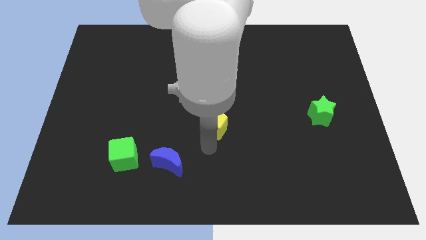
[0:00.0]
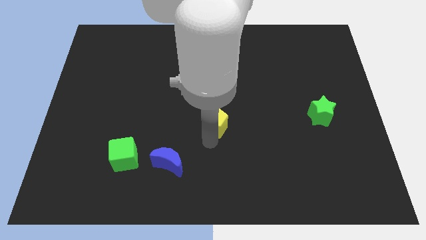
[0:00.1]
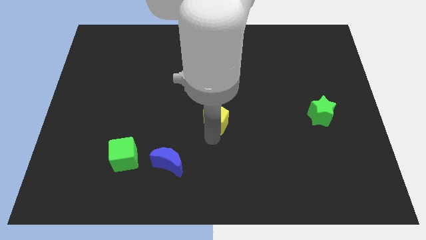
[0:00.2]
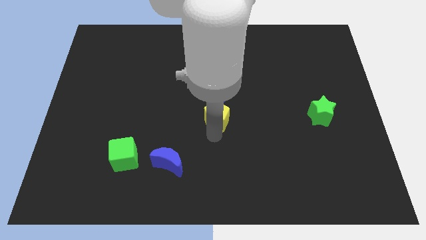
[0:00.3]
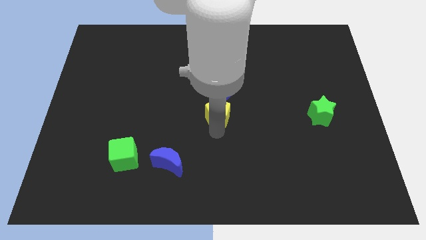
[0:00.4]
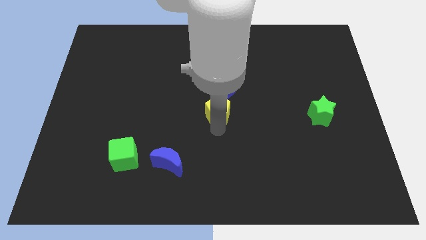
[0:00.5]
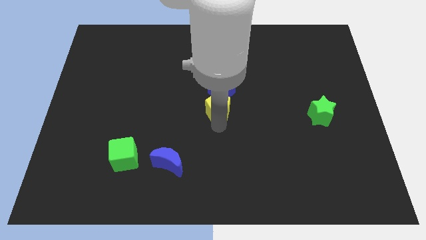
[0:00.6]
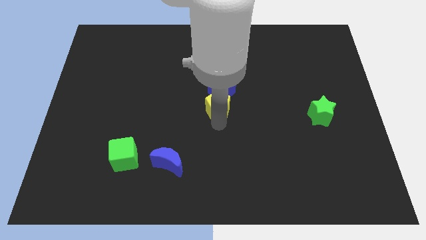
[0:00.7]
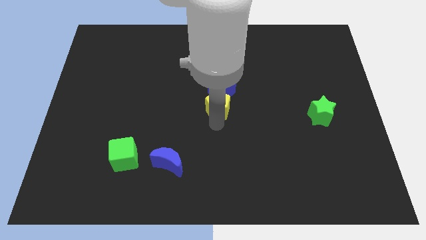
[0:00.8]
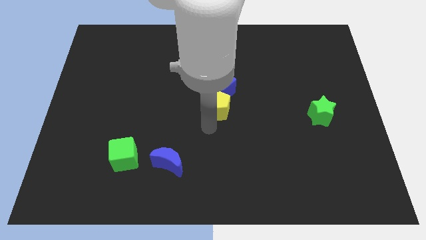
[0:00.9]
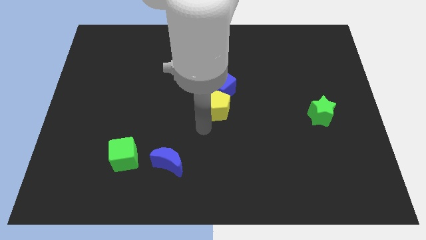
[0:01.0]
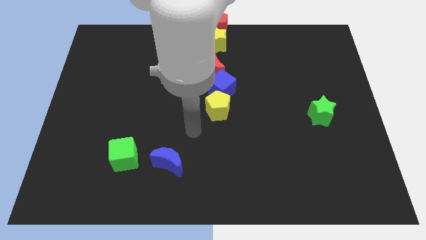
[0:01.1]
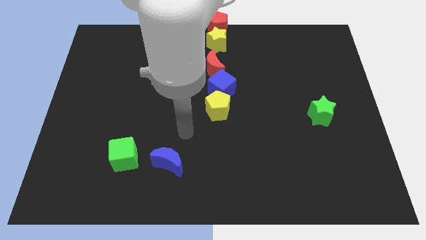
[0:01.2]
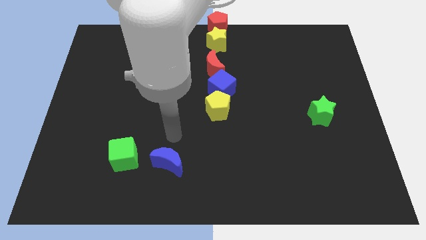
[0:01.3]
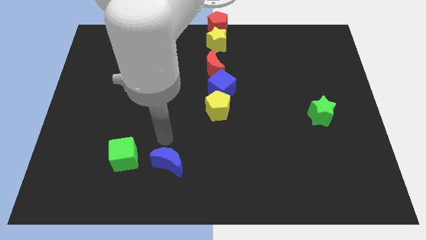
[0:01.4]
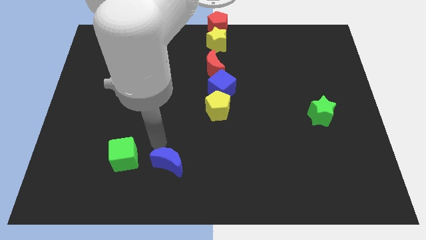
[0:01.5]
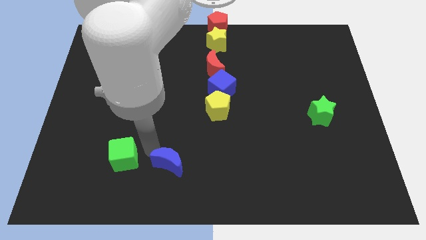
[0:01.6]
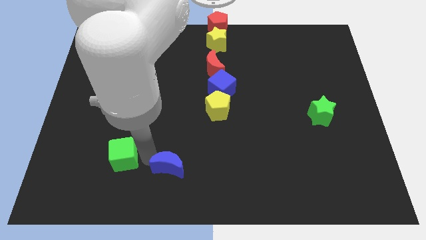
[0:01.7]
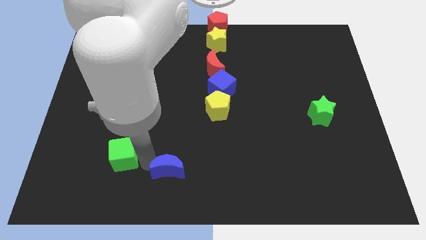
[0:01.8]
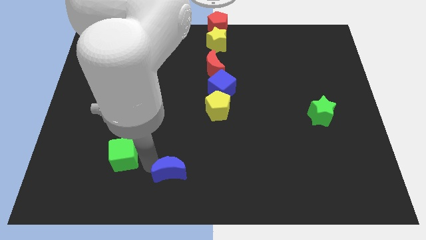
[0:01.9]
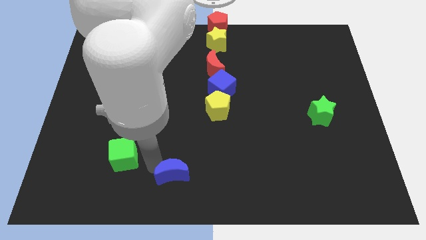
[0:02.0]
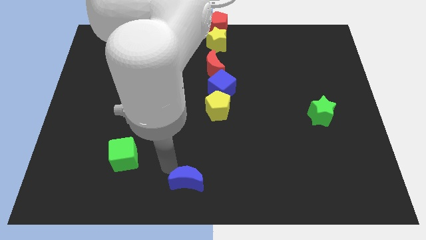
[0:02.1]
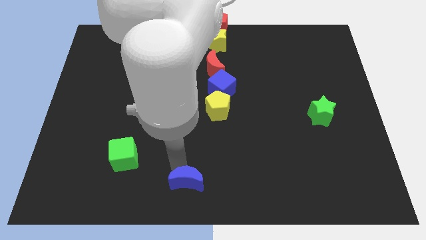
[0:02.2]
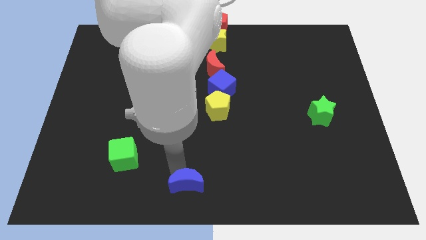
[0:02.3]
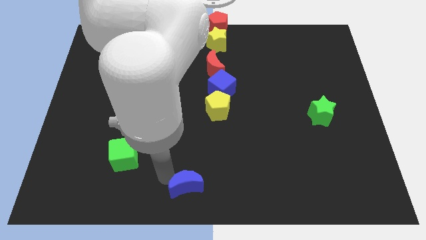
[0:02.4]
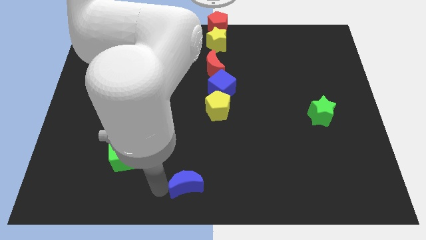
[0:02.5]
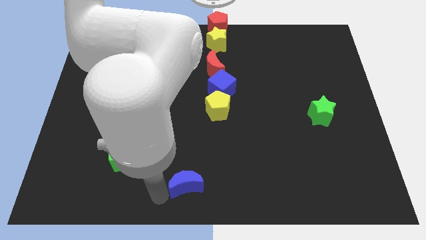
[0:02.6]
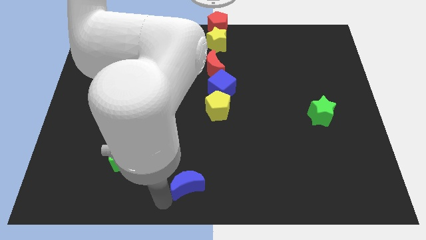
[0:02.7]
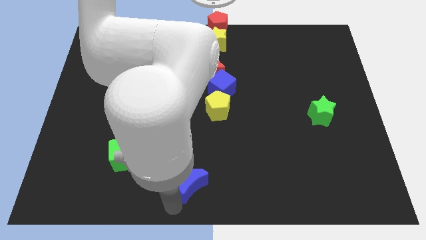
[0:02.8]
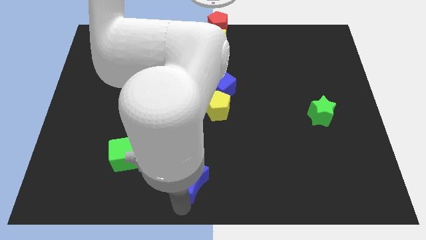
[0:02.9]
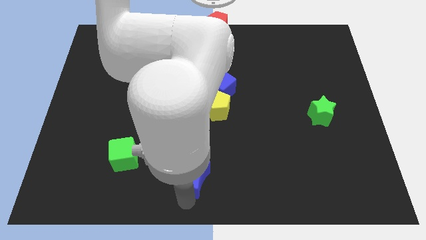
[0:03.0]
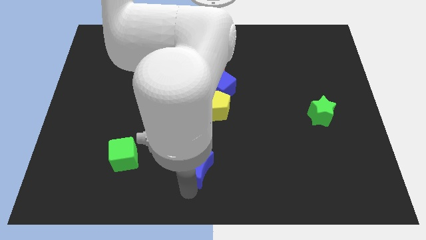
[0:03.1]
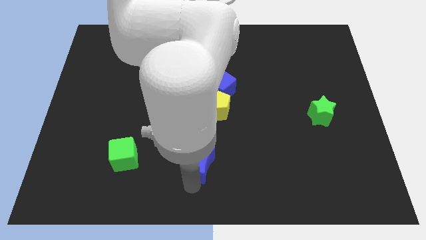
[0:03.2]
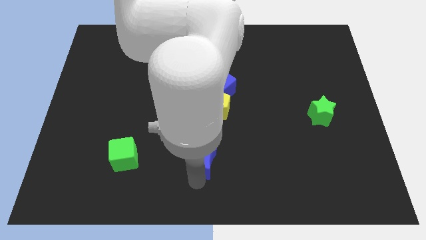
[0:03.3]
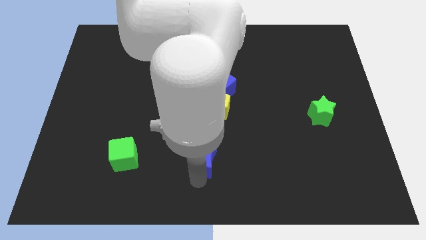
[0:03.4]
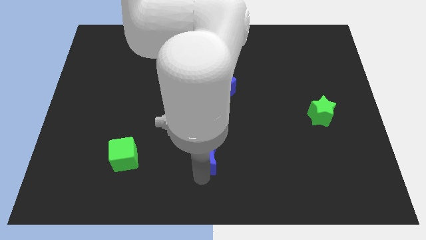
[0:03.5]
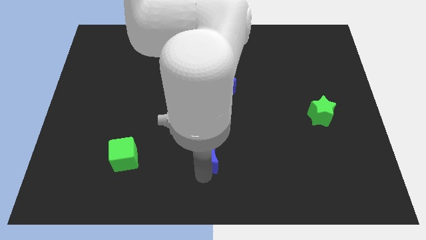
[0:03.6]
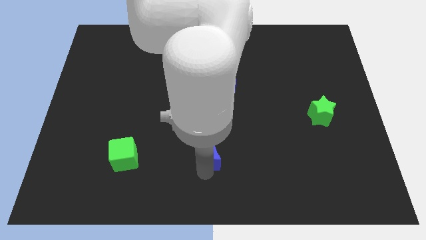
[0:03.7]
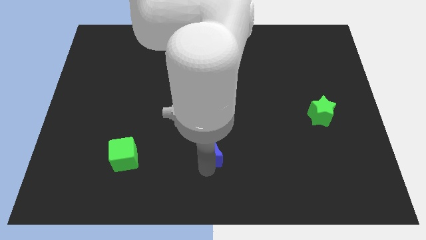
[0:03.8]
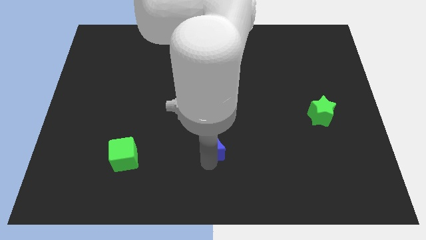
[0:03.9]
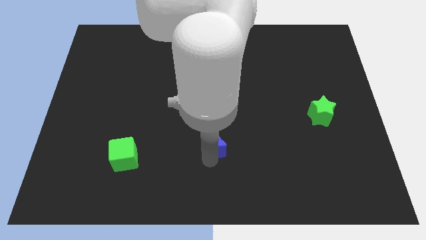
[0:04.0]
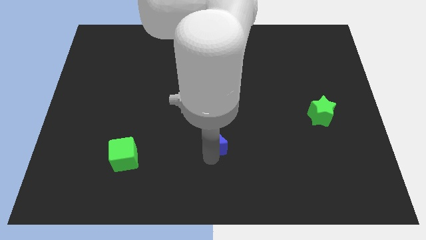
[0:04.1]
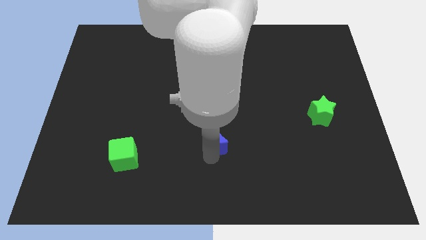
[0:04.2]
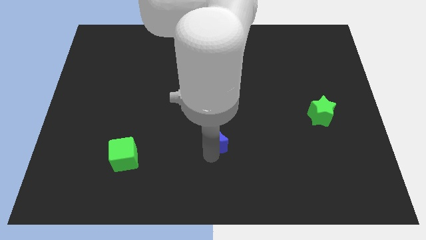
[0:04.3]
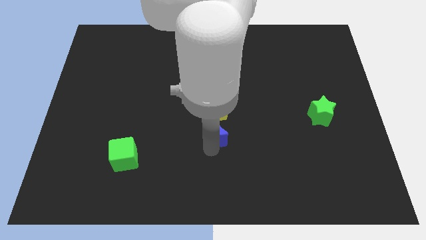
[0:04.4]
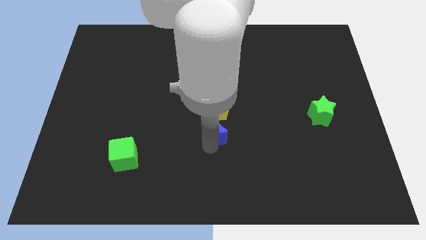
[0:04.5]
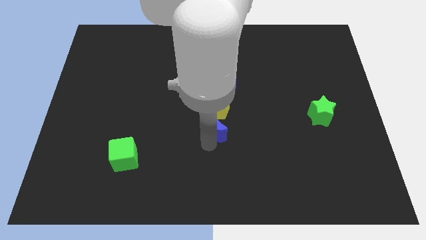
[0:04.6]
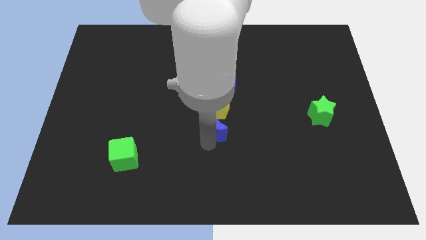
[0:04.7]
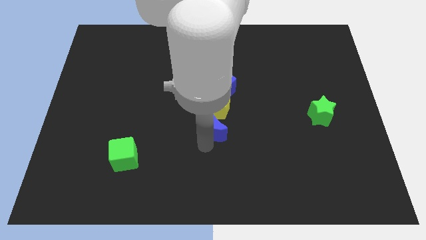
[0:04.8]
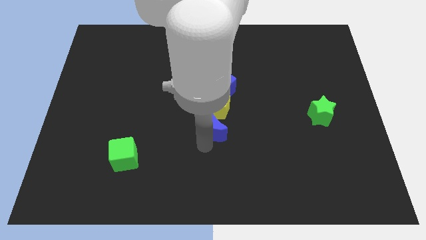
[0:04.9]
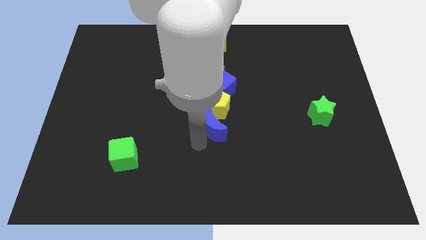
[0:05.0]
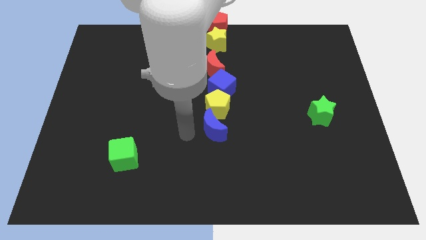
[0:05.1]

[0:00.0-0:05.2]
move the blue crescent below to the yellow pentagon

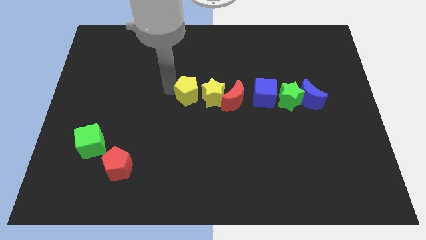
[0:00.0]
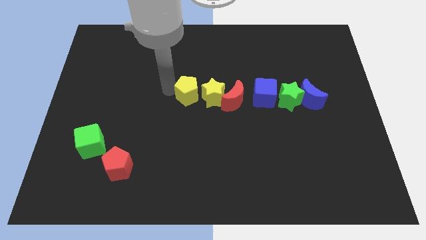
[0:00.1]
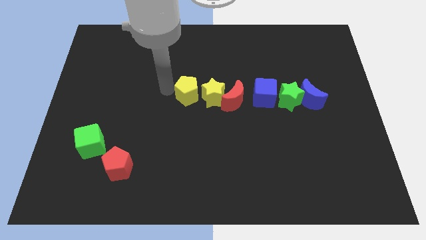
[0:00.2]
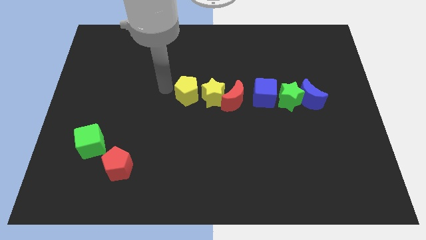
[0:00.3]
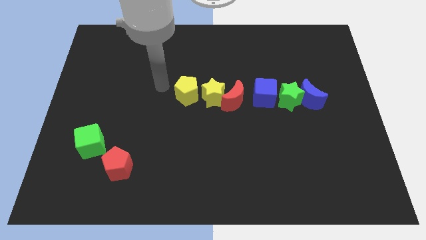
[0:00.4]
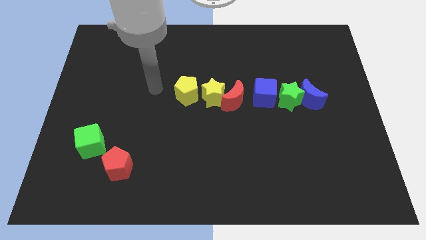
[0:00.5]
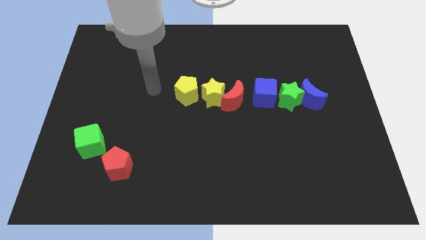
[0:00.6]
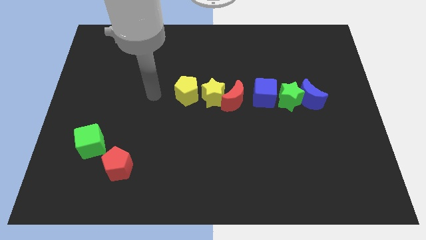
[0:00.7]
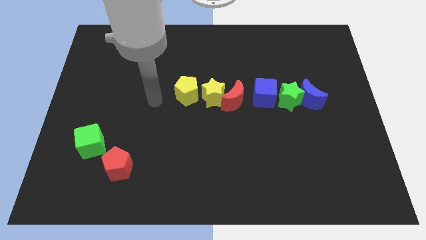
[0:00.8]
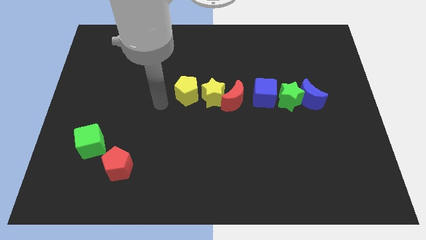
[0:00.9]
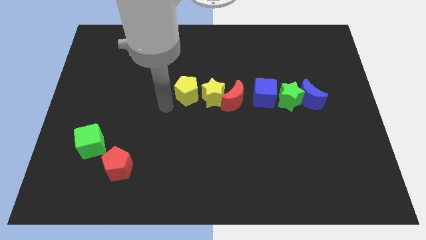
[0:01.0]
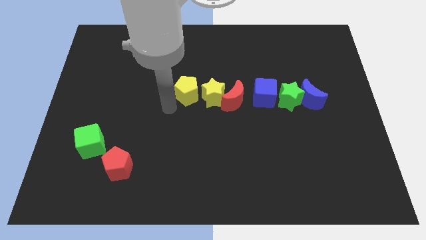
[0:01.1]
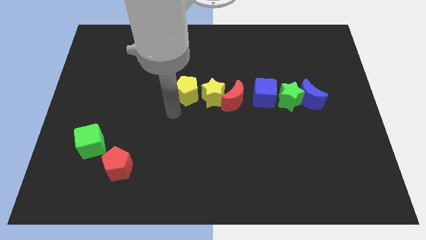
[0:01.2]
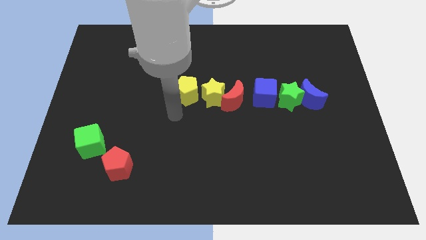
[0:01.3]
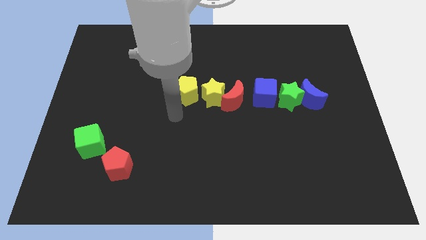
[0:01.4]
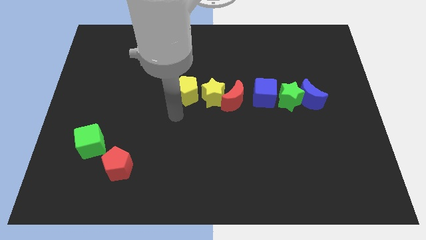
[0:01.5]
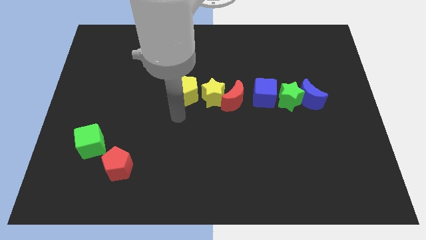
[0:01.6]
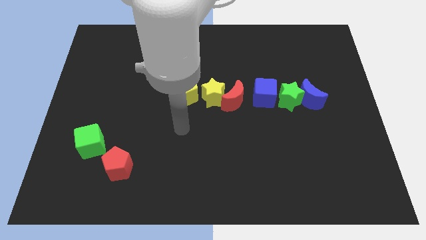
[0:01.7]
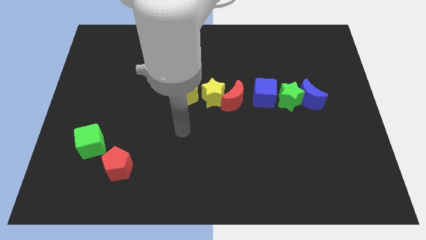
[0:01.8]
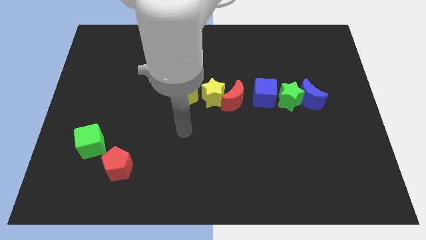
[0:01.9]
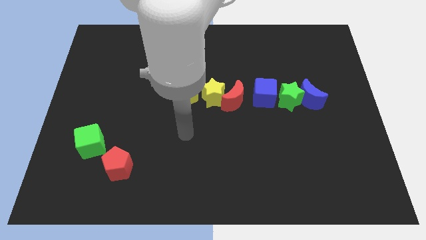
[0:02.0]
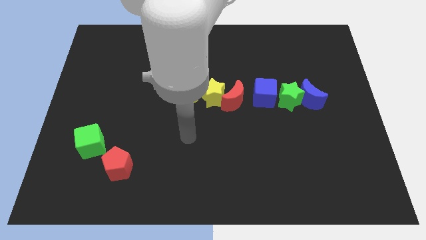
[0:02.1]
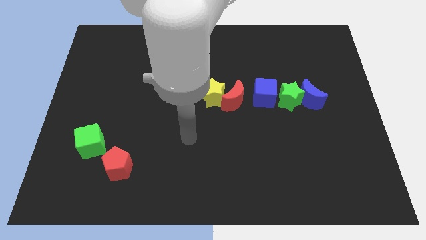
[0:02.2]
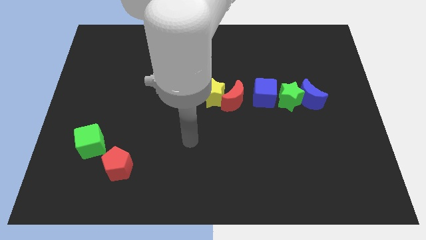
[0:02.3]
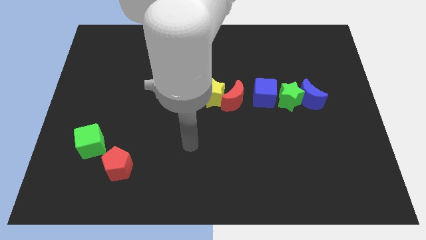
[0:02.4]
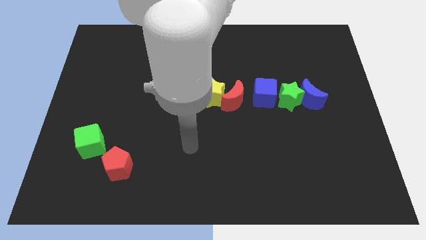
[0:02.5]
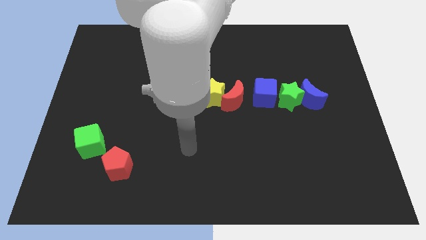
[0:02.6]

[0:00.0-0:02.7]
move your arm towards the bottom side of the board

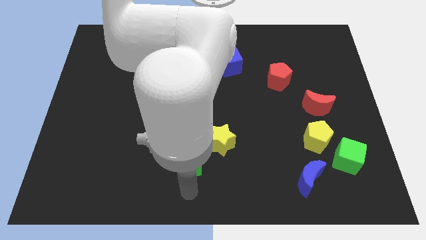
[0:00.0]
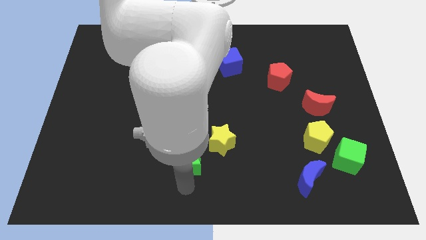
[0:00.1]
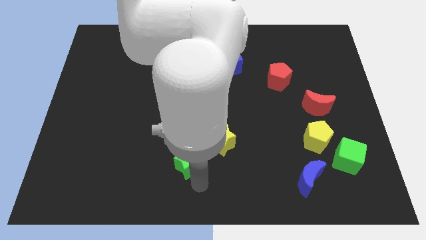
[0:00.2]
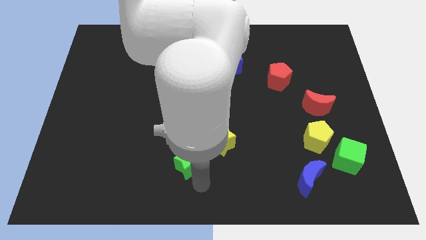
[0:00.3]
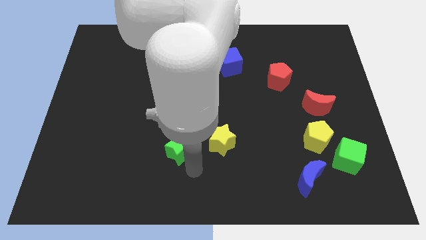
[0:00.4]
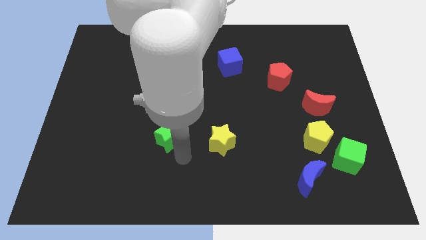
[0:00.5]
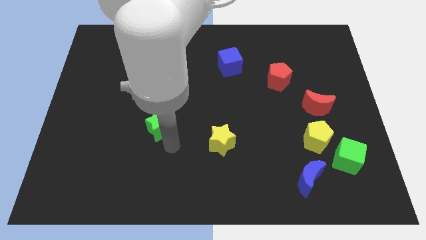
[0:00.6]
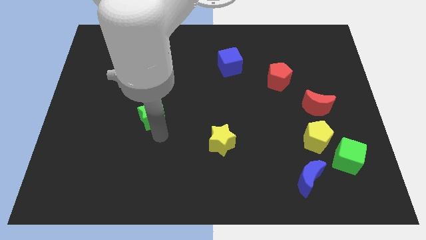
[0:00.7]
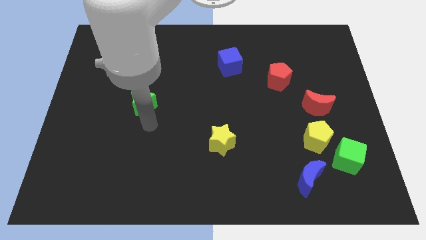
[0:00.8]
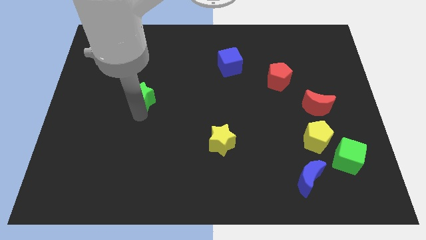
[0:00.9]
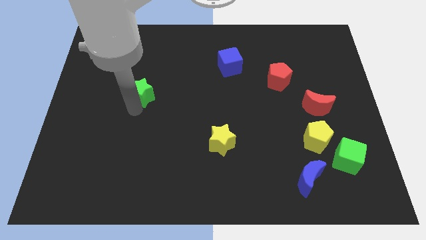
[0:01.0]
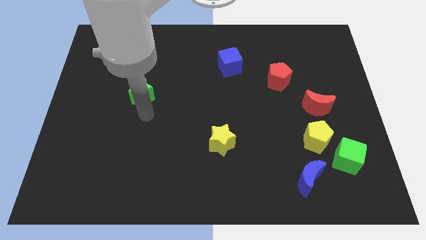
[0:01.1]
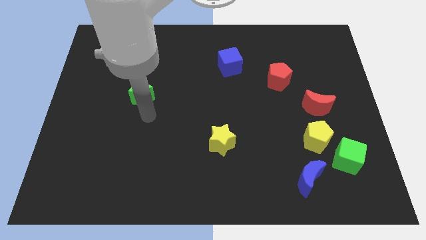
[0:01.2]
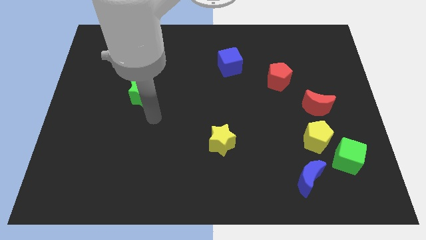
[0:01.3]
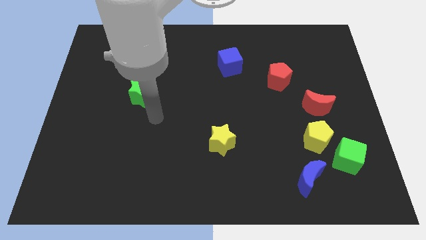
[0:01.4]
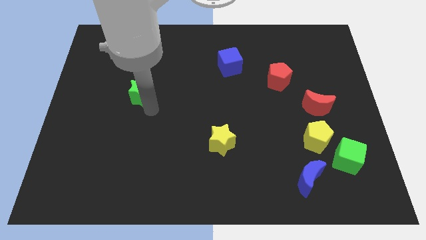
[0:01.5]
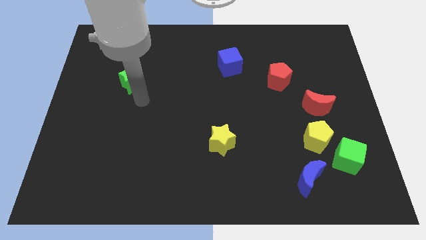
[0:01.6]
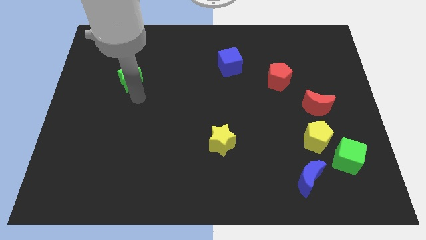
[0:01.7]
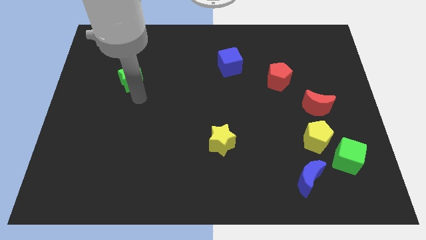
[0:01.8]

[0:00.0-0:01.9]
push the green star towards left
